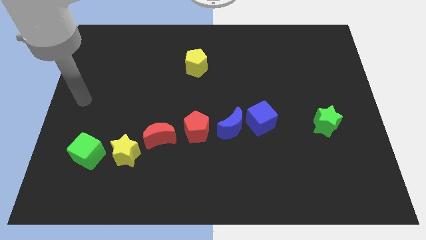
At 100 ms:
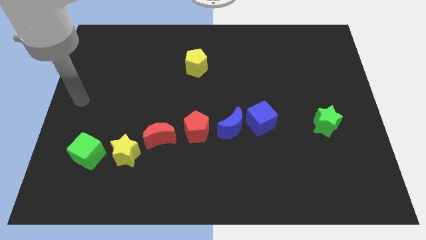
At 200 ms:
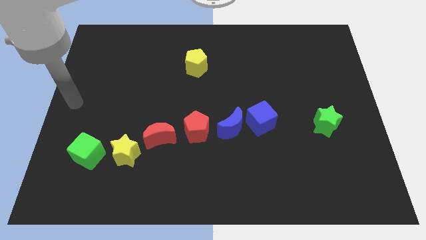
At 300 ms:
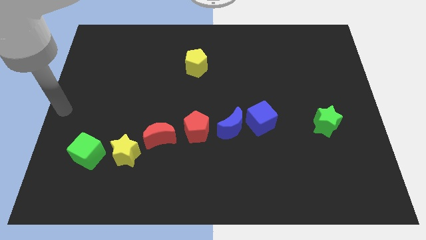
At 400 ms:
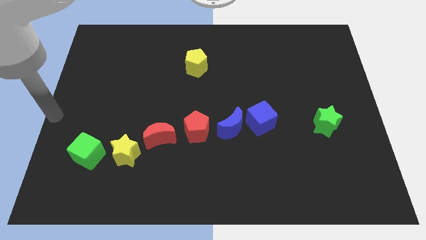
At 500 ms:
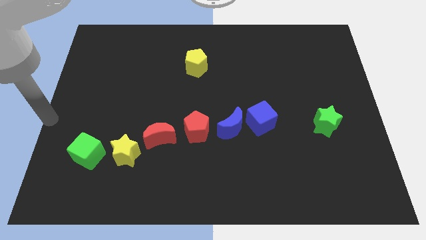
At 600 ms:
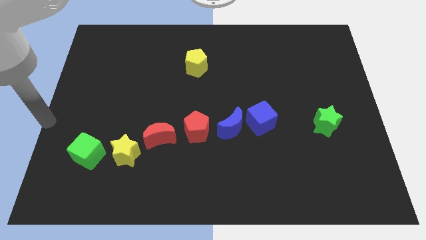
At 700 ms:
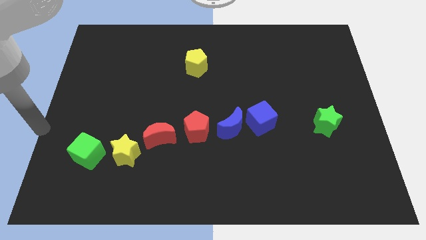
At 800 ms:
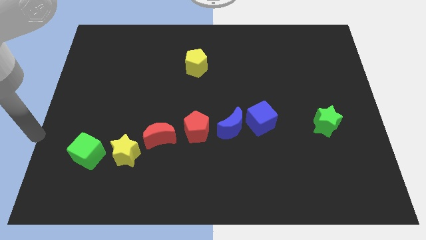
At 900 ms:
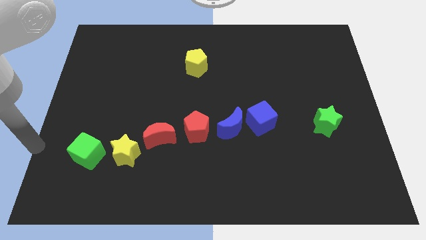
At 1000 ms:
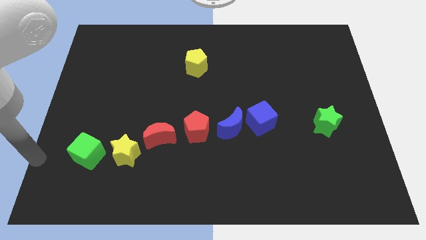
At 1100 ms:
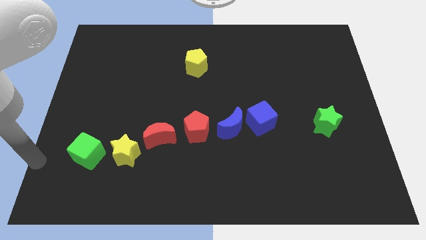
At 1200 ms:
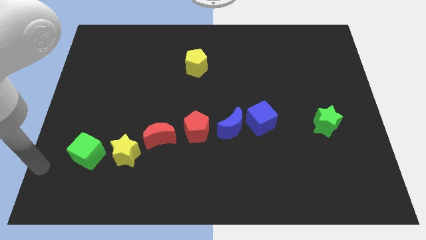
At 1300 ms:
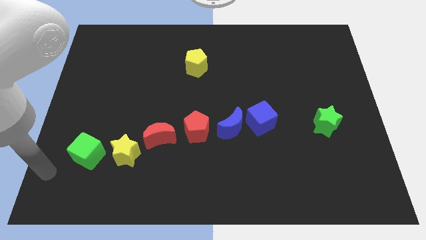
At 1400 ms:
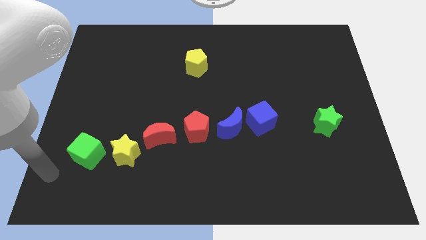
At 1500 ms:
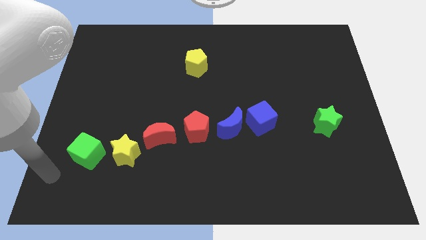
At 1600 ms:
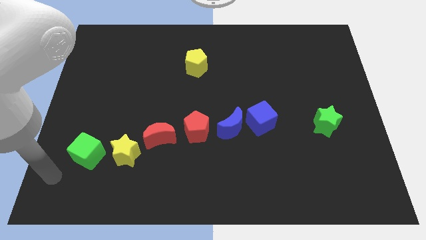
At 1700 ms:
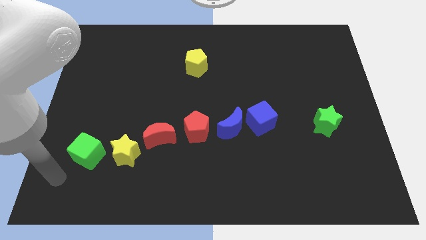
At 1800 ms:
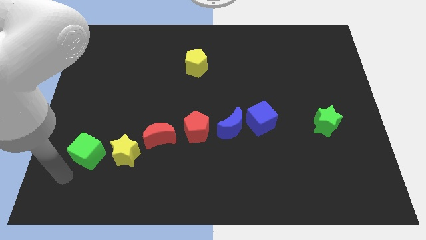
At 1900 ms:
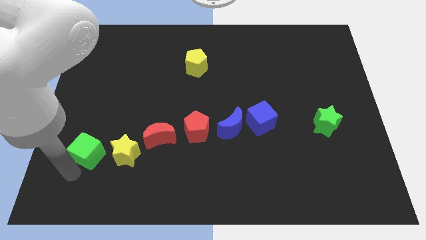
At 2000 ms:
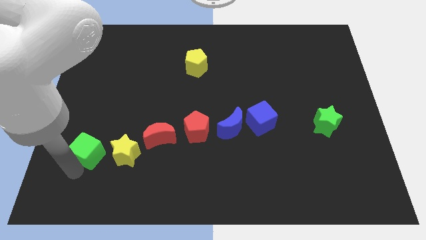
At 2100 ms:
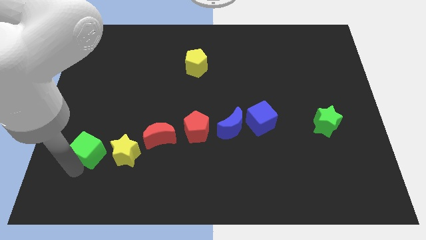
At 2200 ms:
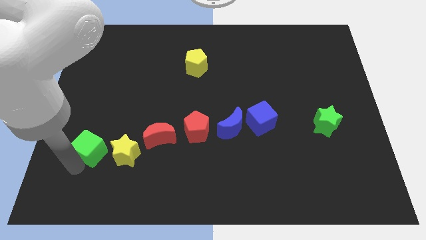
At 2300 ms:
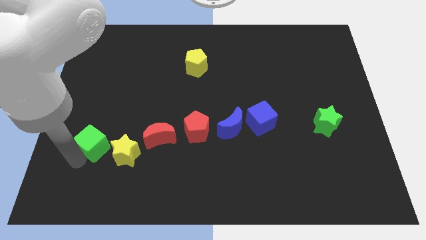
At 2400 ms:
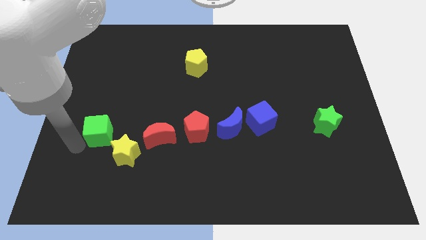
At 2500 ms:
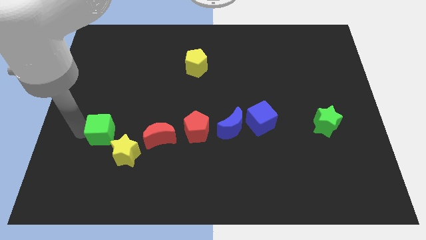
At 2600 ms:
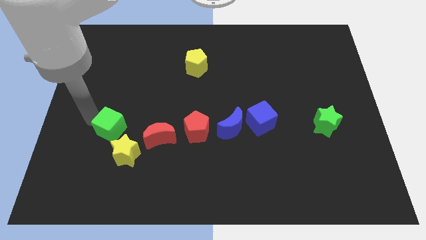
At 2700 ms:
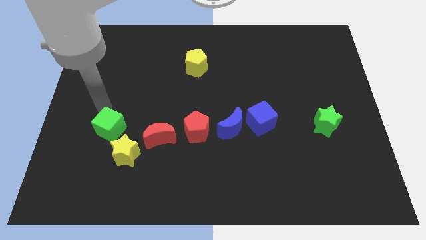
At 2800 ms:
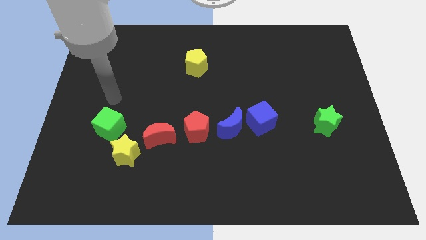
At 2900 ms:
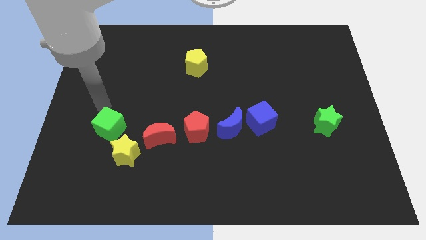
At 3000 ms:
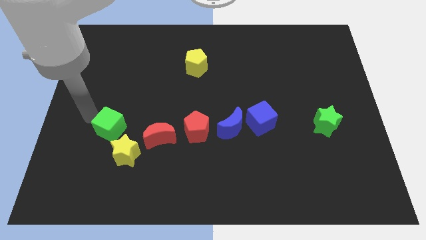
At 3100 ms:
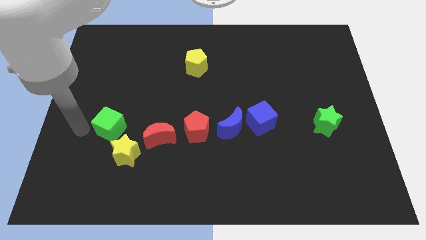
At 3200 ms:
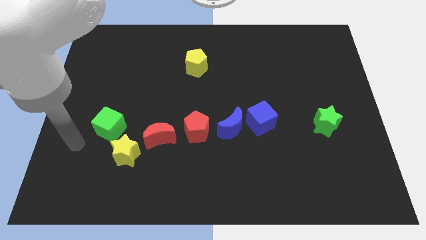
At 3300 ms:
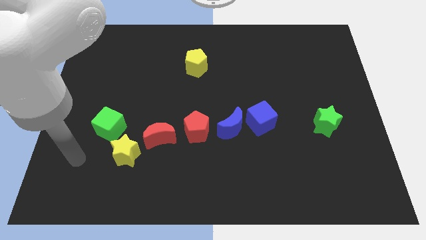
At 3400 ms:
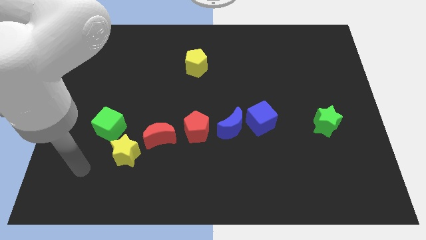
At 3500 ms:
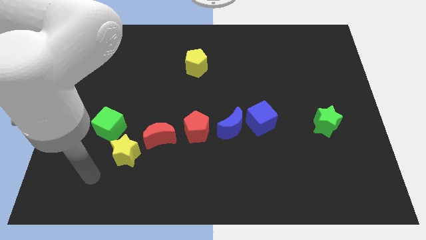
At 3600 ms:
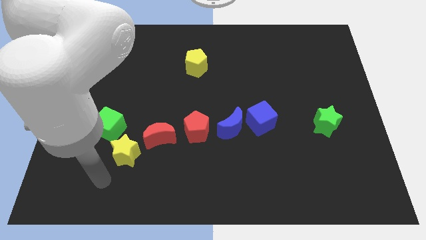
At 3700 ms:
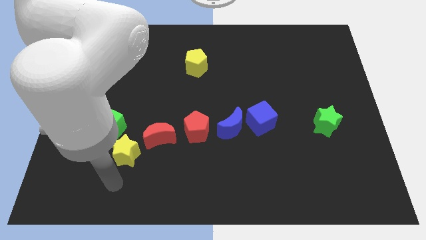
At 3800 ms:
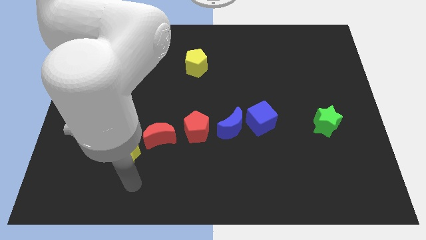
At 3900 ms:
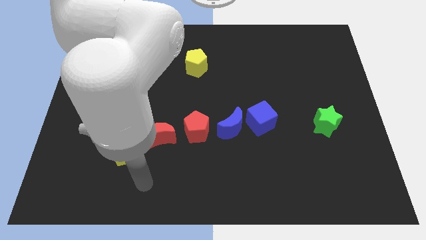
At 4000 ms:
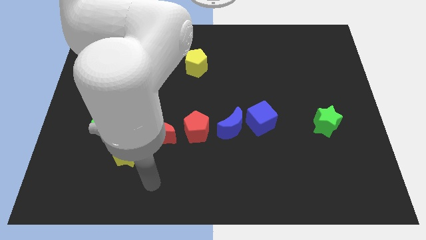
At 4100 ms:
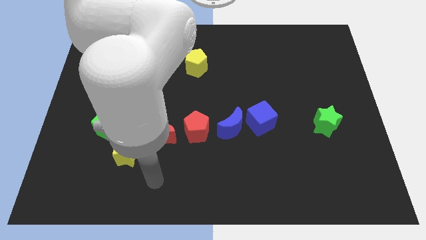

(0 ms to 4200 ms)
slide the green cube diagonally top left to yellow star

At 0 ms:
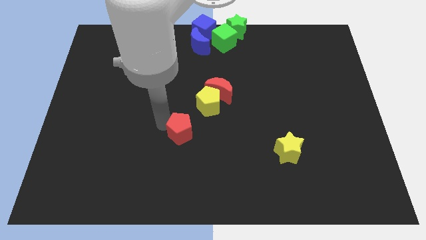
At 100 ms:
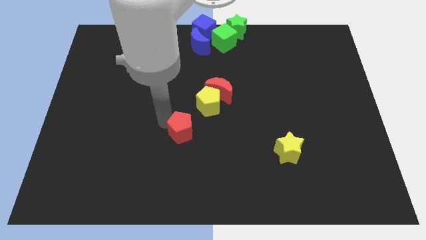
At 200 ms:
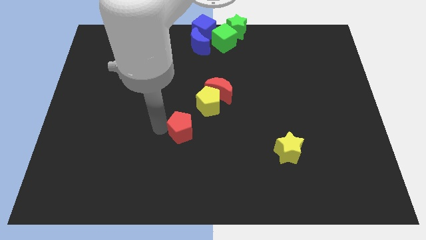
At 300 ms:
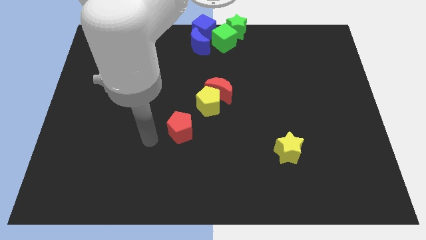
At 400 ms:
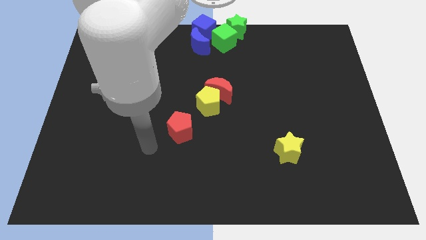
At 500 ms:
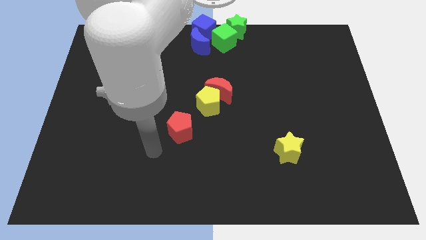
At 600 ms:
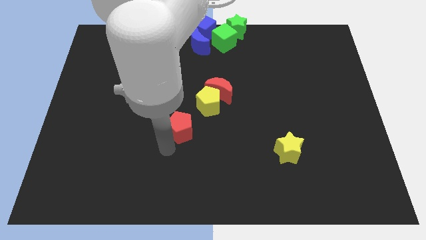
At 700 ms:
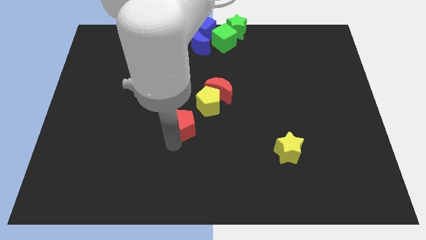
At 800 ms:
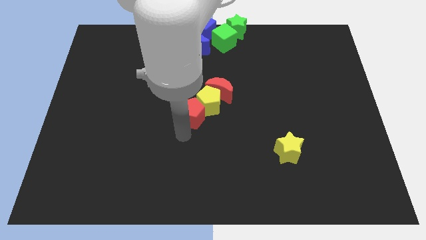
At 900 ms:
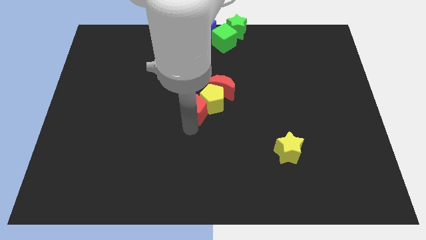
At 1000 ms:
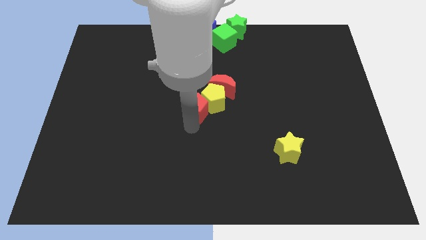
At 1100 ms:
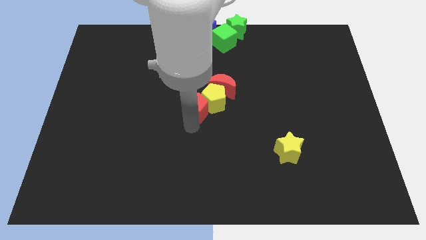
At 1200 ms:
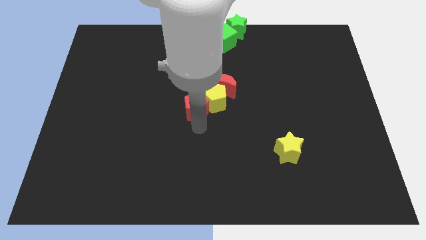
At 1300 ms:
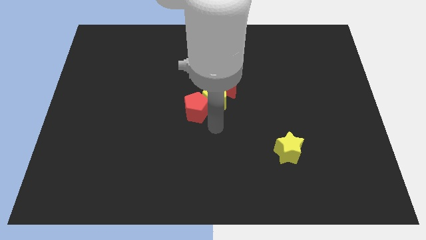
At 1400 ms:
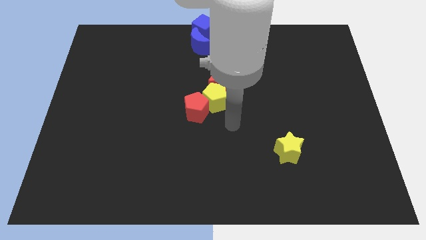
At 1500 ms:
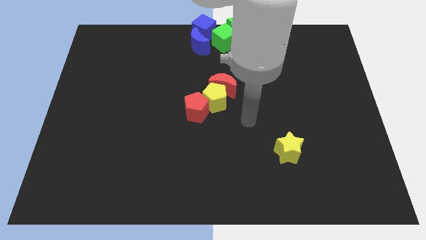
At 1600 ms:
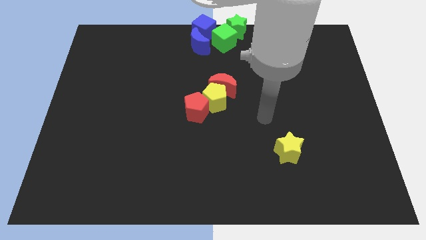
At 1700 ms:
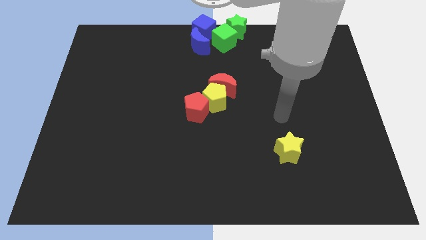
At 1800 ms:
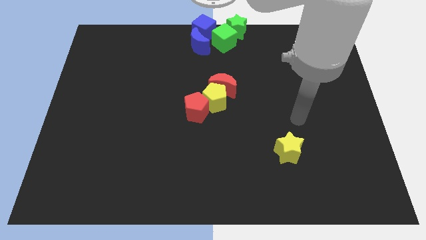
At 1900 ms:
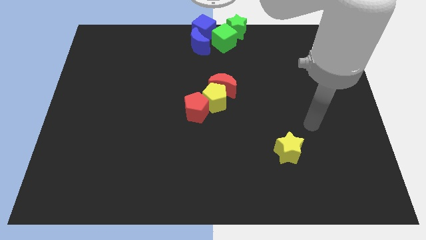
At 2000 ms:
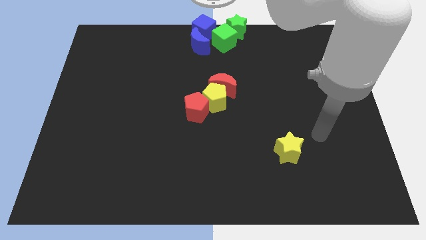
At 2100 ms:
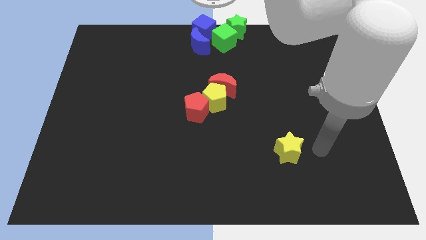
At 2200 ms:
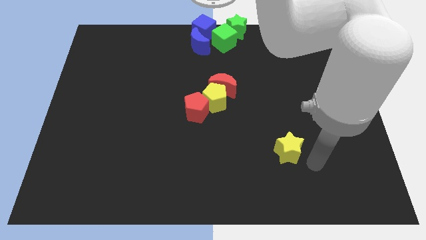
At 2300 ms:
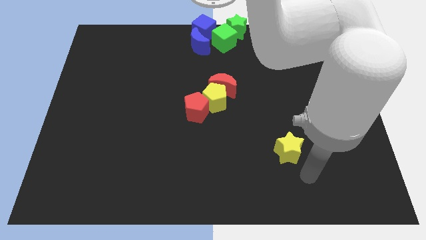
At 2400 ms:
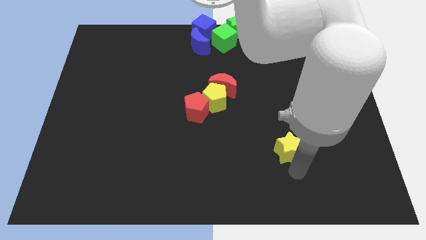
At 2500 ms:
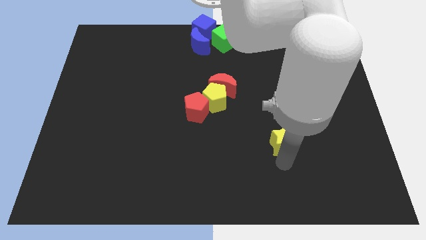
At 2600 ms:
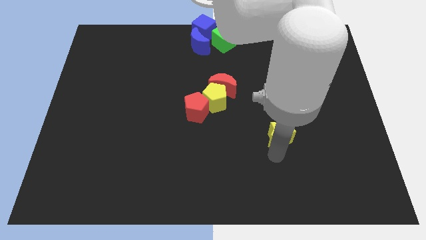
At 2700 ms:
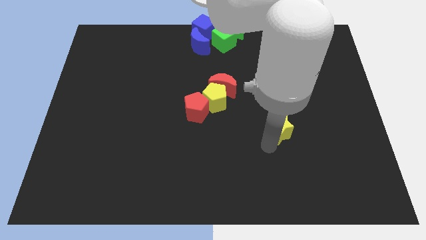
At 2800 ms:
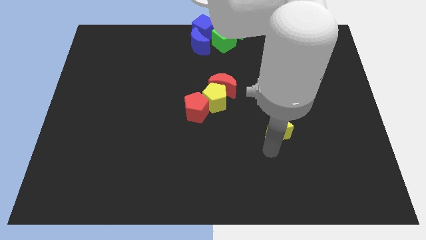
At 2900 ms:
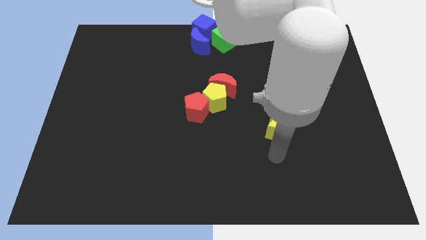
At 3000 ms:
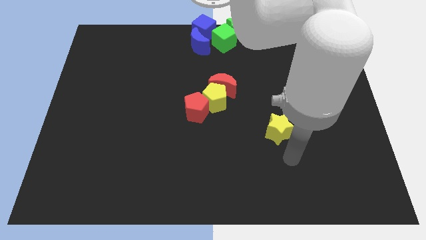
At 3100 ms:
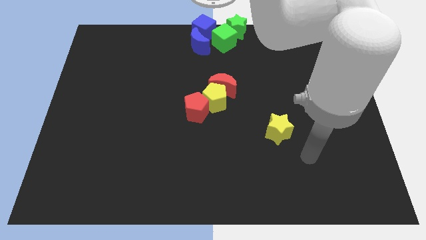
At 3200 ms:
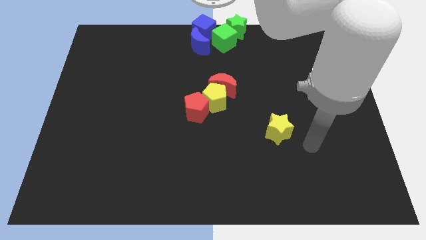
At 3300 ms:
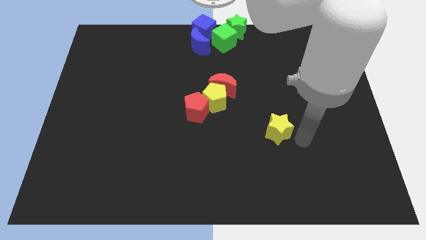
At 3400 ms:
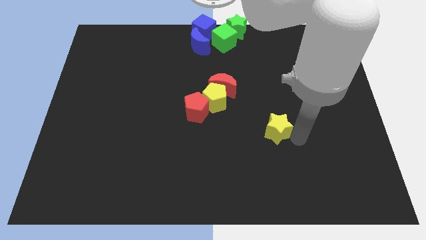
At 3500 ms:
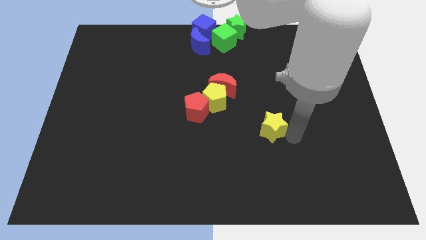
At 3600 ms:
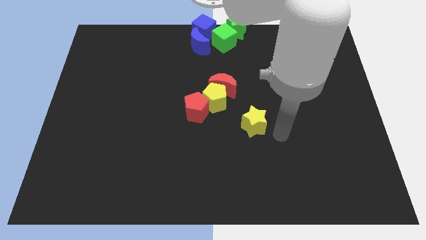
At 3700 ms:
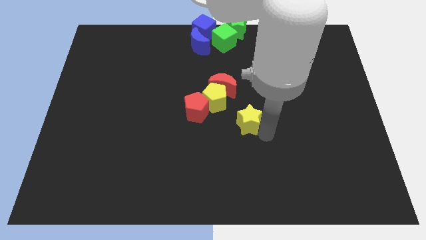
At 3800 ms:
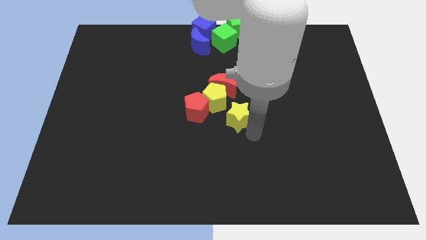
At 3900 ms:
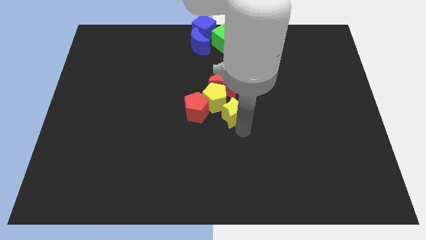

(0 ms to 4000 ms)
drag the yellow star into the yellow pentagon

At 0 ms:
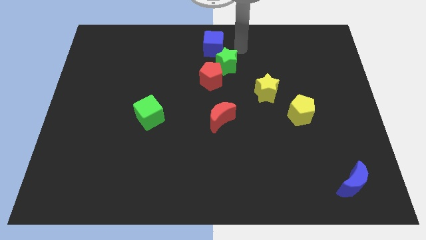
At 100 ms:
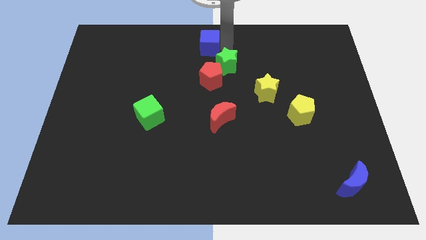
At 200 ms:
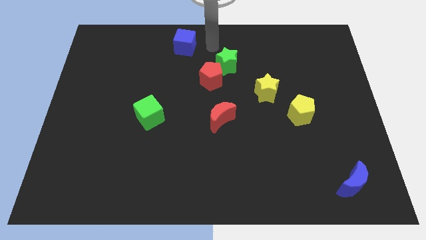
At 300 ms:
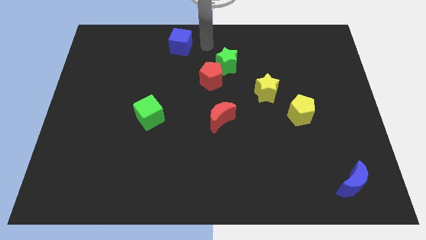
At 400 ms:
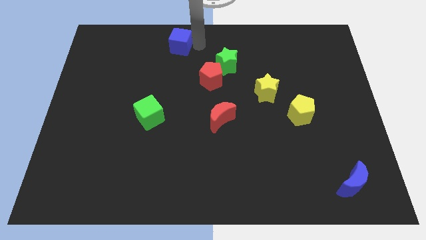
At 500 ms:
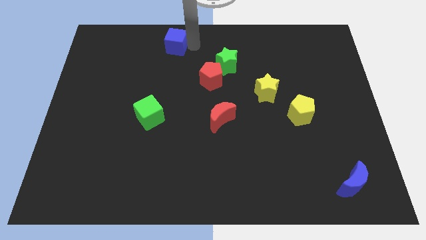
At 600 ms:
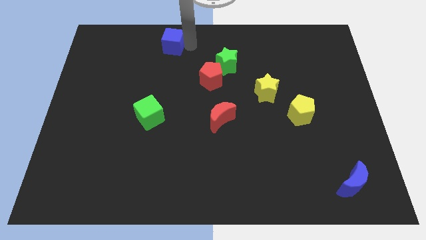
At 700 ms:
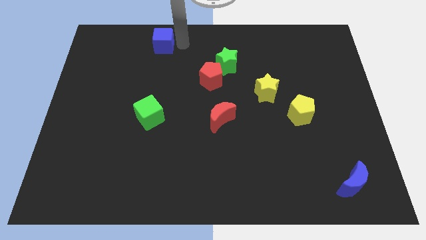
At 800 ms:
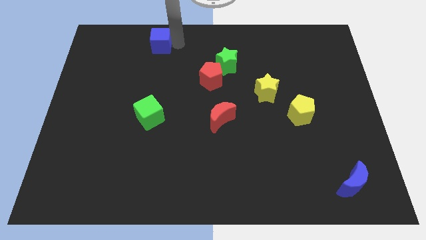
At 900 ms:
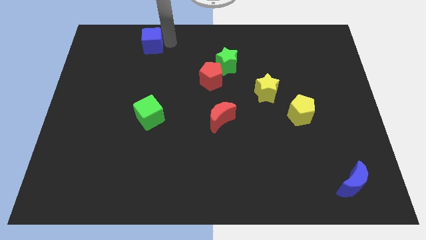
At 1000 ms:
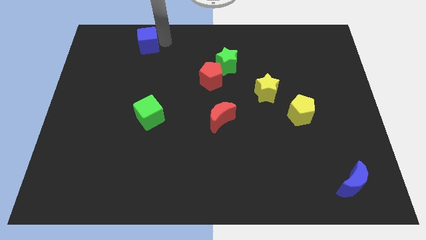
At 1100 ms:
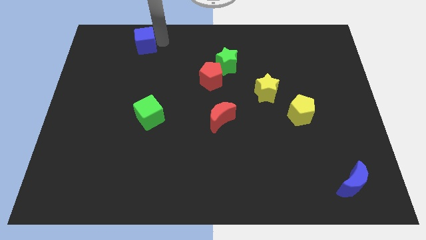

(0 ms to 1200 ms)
drag the blue cube towards the left side of the board
